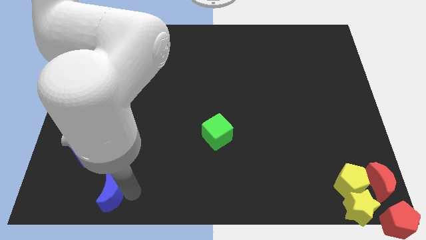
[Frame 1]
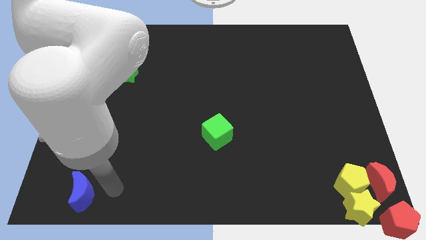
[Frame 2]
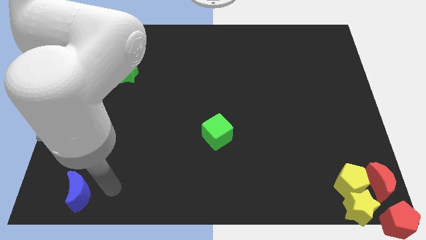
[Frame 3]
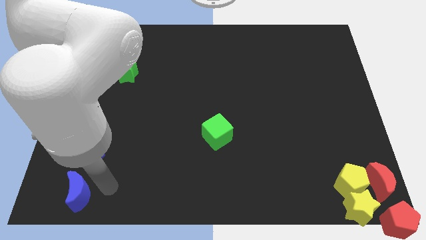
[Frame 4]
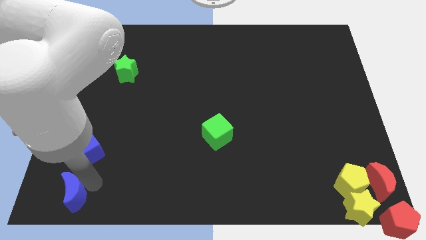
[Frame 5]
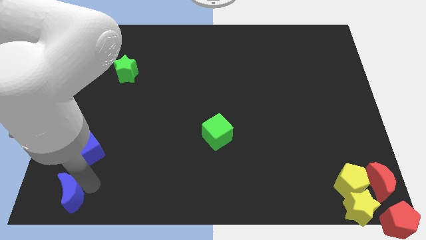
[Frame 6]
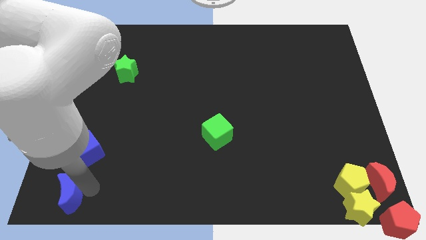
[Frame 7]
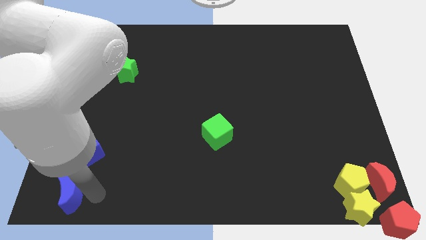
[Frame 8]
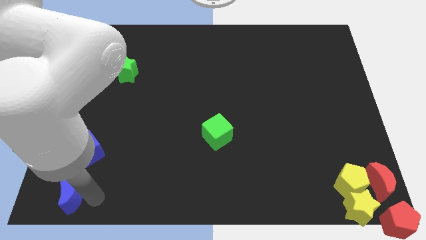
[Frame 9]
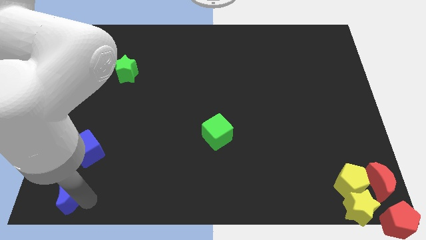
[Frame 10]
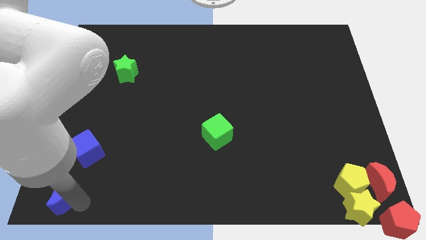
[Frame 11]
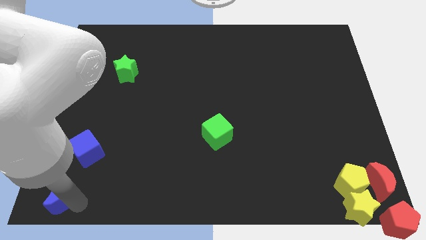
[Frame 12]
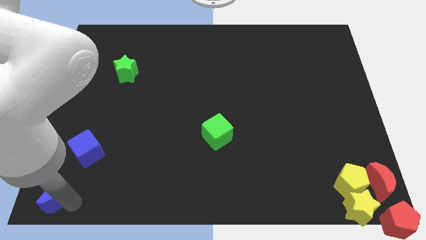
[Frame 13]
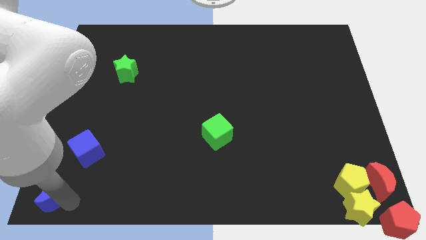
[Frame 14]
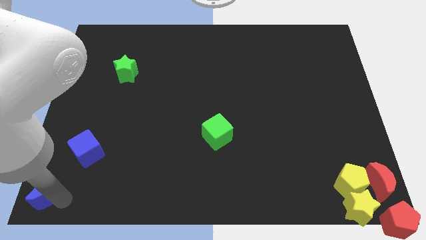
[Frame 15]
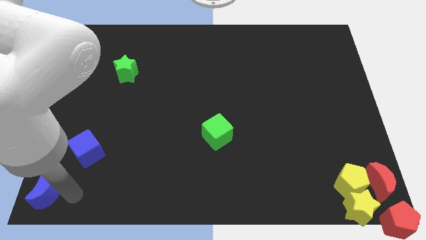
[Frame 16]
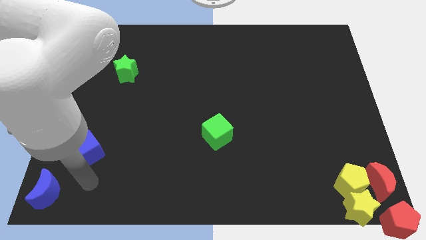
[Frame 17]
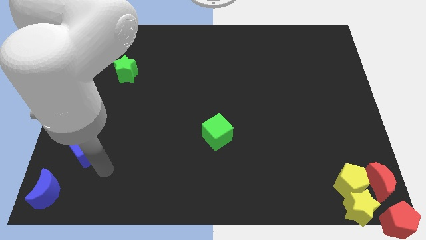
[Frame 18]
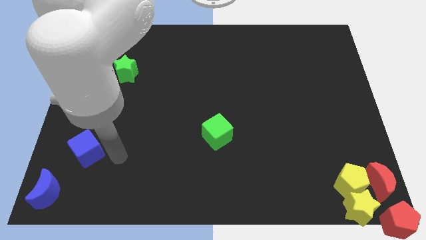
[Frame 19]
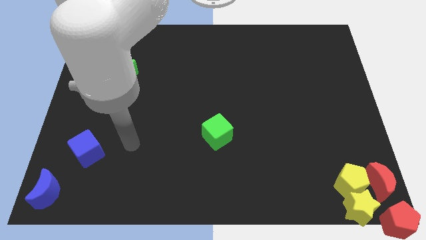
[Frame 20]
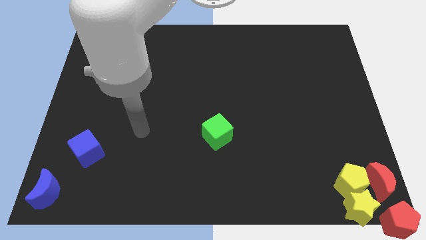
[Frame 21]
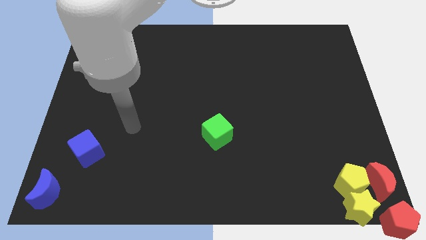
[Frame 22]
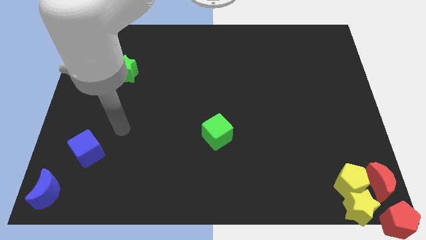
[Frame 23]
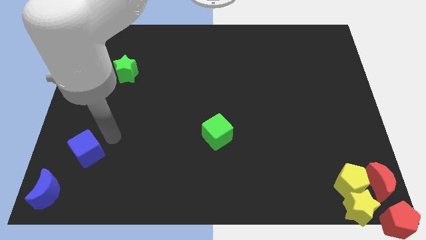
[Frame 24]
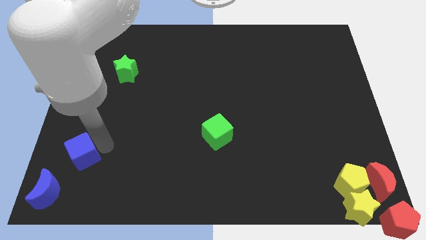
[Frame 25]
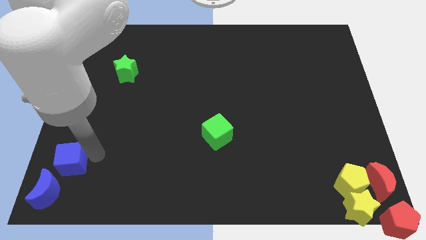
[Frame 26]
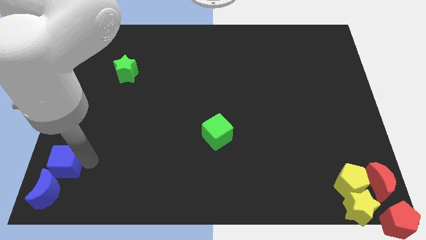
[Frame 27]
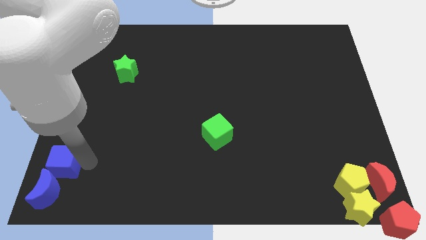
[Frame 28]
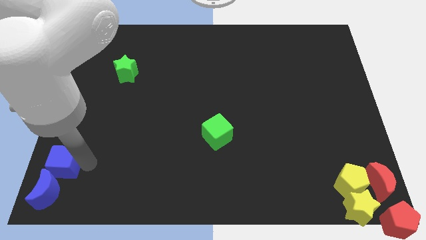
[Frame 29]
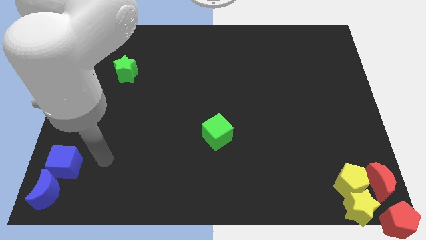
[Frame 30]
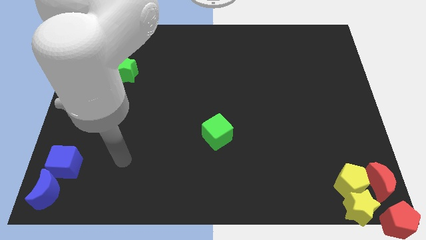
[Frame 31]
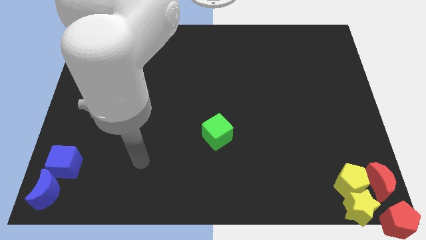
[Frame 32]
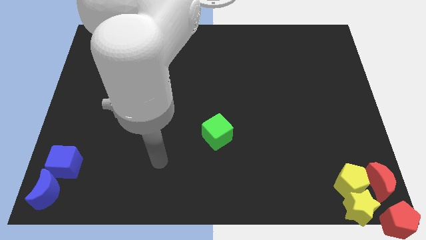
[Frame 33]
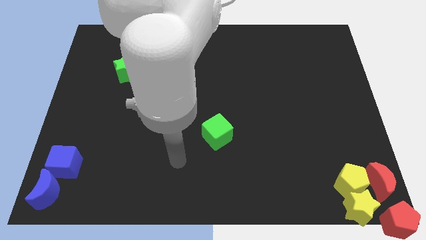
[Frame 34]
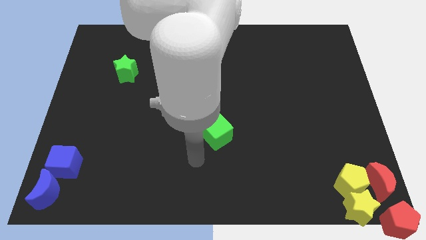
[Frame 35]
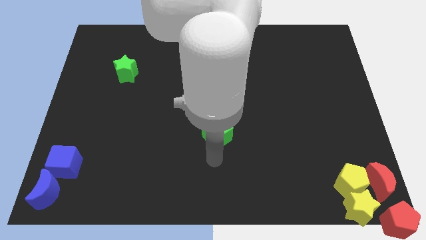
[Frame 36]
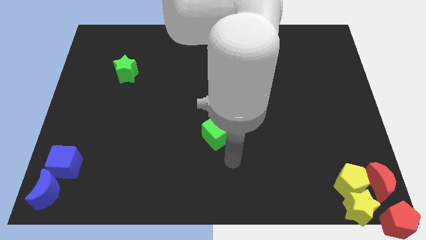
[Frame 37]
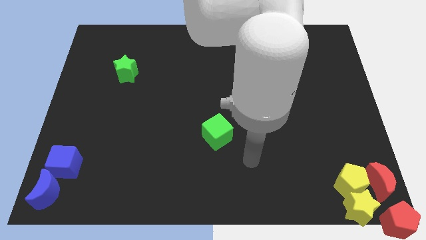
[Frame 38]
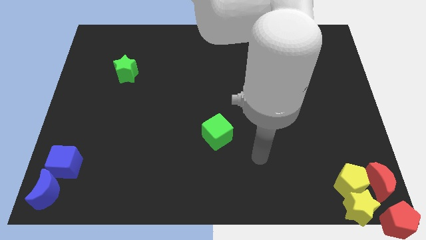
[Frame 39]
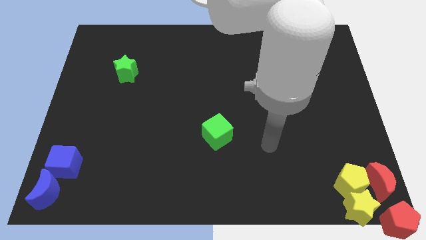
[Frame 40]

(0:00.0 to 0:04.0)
move the blue blocks to the left bottom corner
